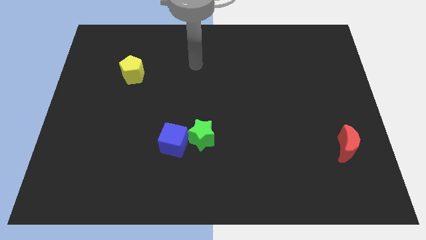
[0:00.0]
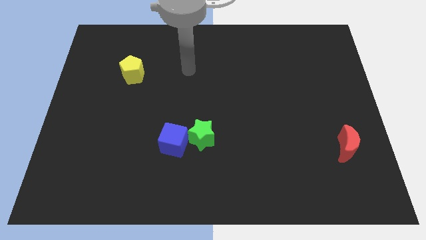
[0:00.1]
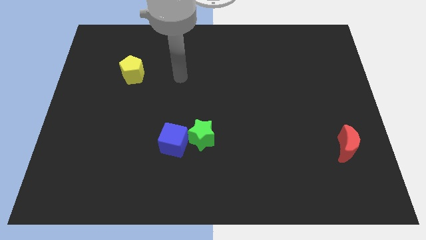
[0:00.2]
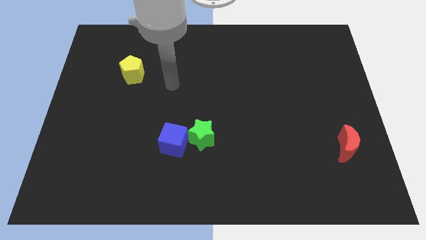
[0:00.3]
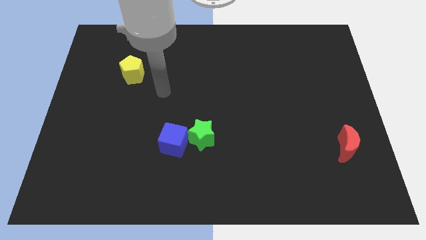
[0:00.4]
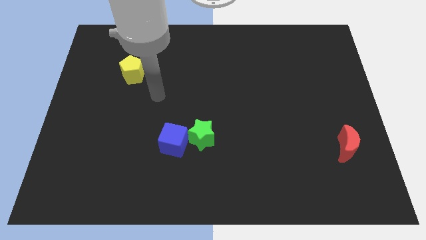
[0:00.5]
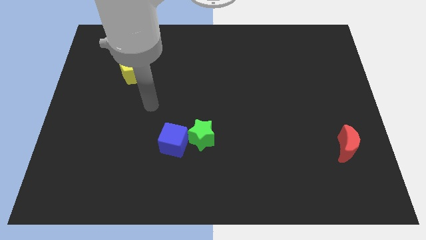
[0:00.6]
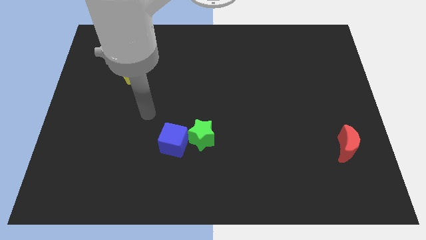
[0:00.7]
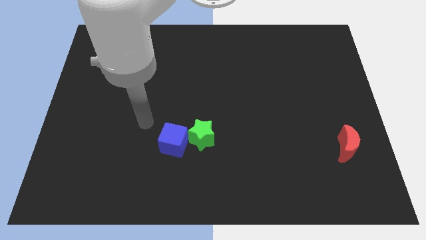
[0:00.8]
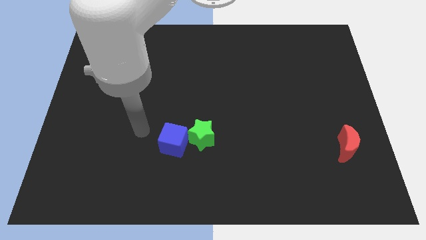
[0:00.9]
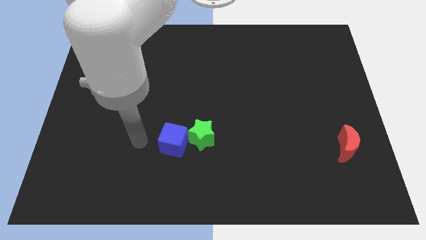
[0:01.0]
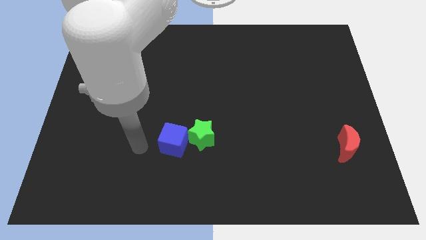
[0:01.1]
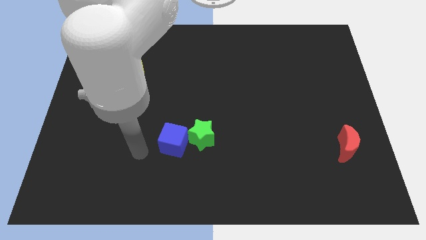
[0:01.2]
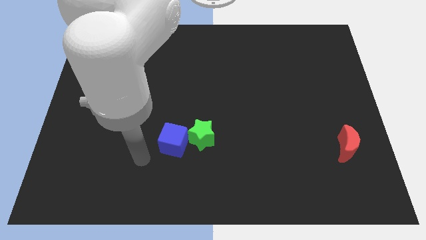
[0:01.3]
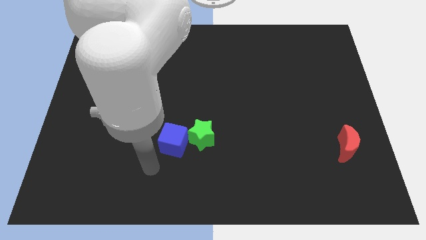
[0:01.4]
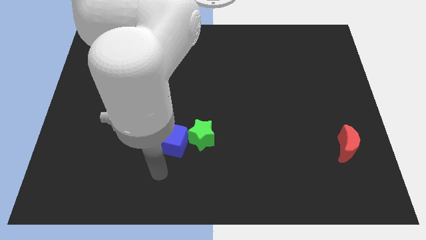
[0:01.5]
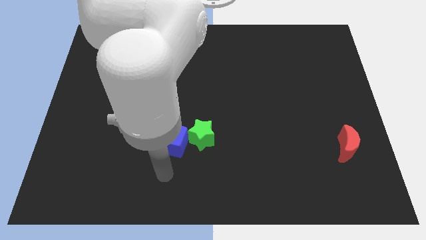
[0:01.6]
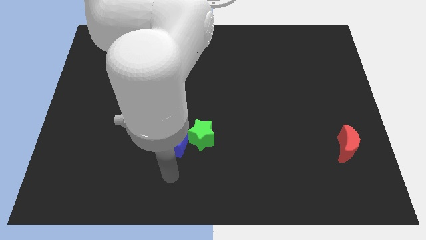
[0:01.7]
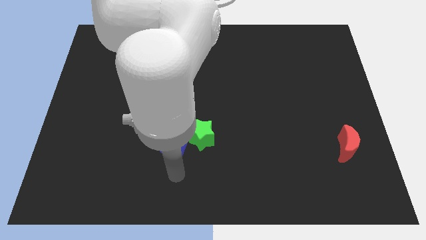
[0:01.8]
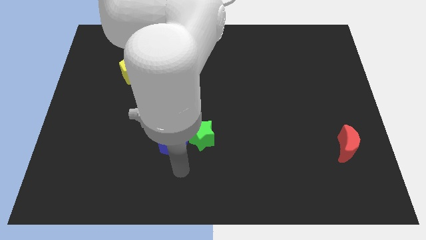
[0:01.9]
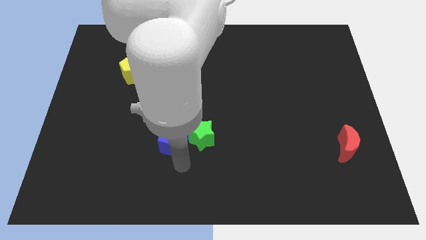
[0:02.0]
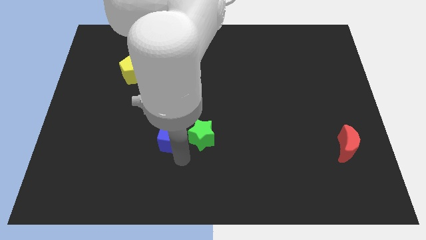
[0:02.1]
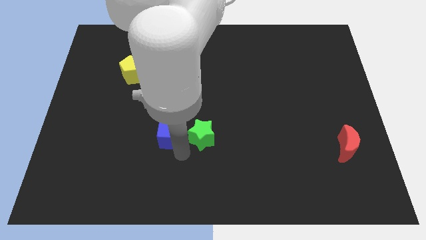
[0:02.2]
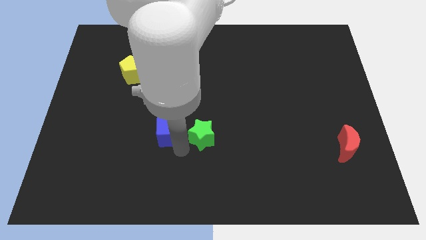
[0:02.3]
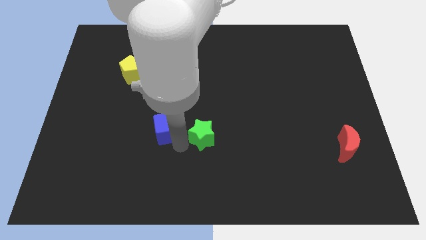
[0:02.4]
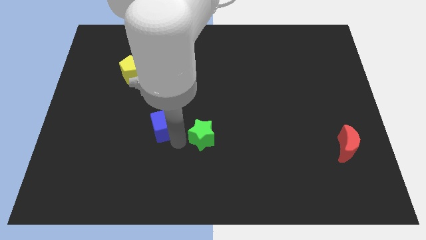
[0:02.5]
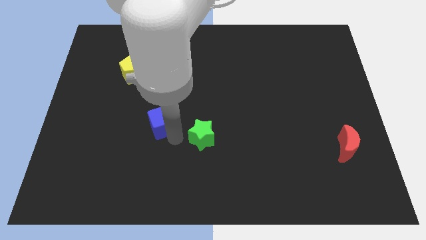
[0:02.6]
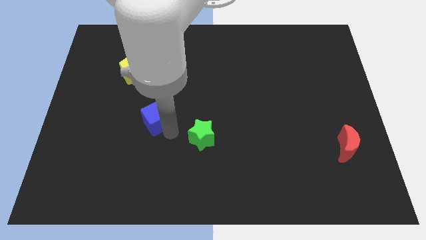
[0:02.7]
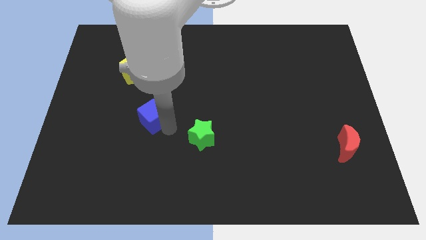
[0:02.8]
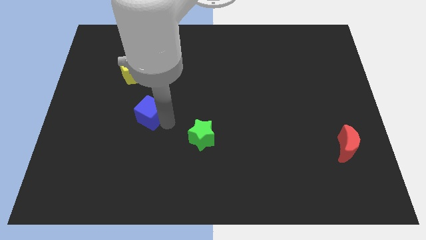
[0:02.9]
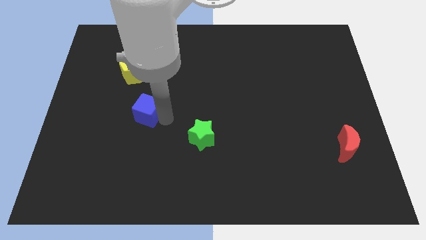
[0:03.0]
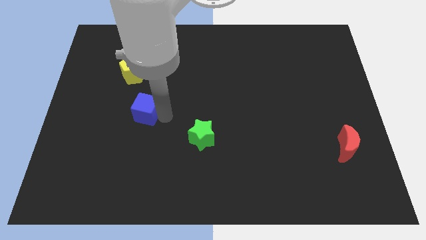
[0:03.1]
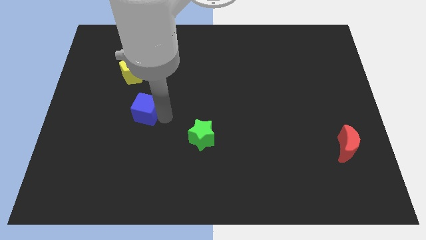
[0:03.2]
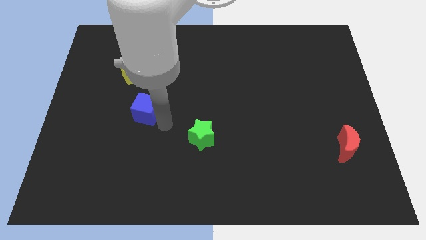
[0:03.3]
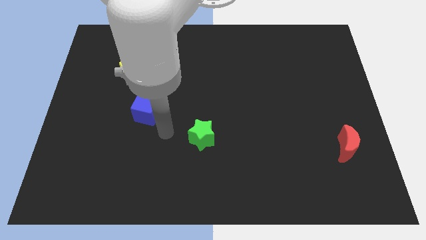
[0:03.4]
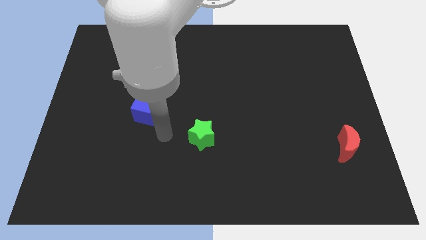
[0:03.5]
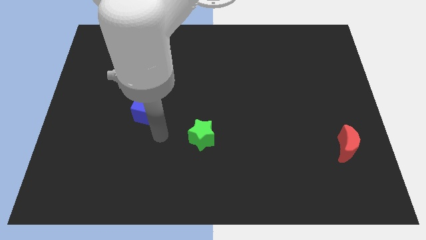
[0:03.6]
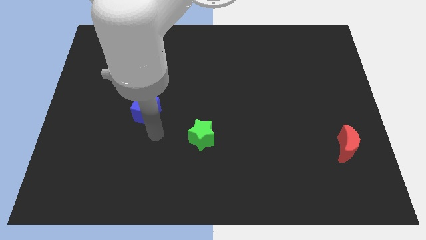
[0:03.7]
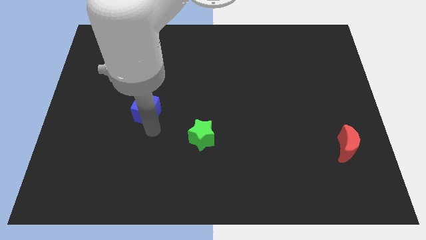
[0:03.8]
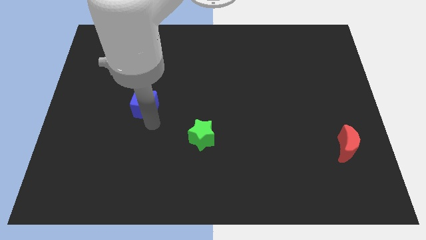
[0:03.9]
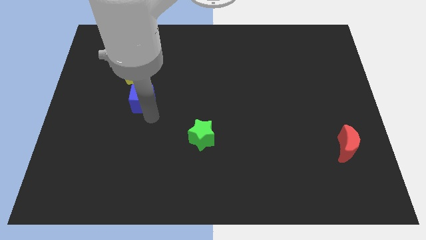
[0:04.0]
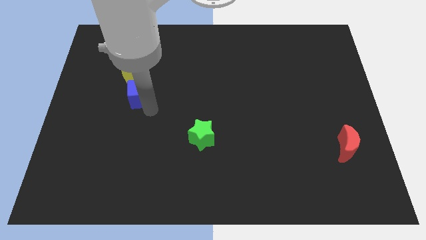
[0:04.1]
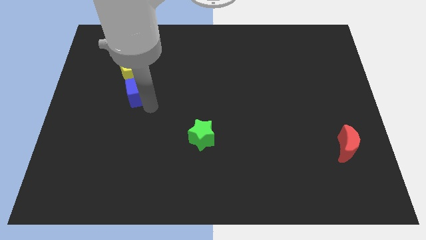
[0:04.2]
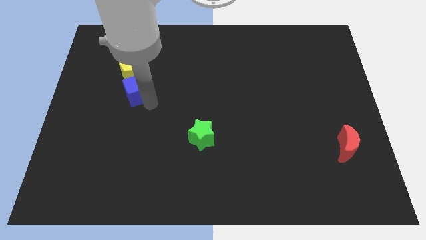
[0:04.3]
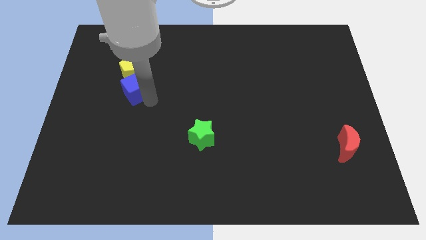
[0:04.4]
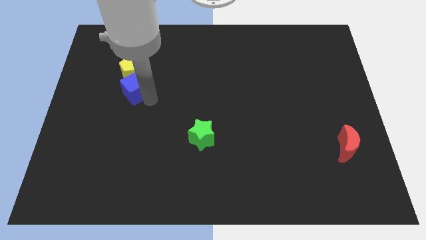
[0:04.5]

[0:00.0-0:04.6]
slide the blue block close to the yellow pentagon

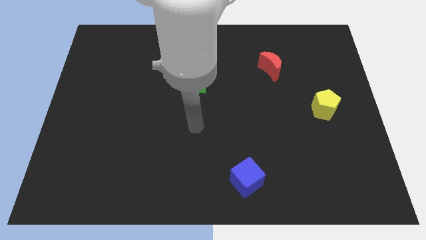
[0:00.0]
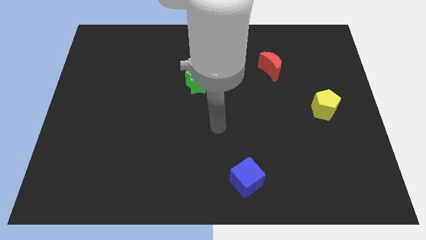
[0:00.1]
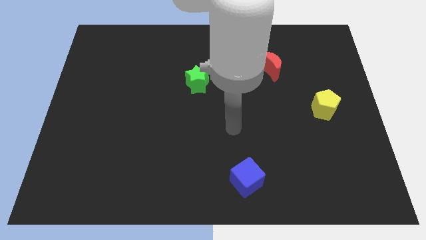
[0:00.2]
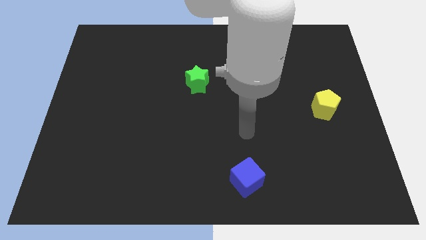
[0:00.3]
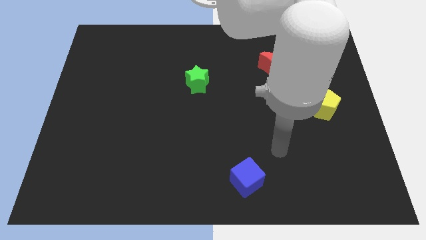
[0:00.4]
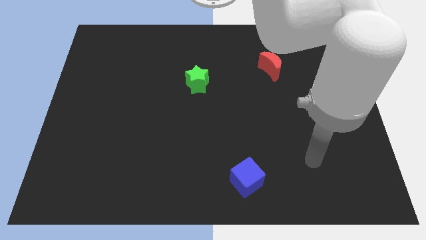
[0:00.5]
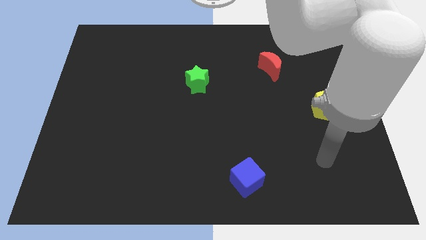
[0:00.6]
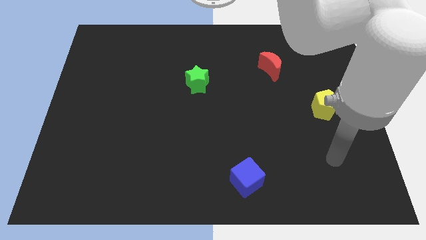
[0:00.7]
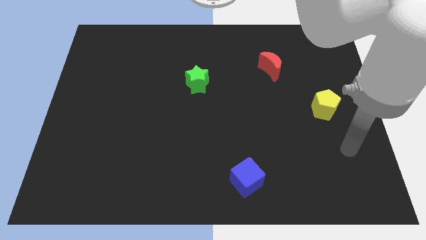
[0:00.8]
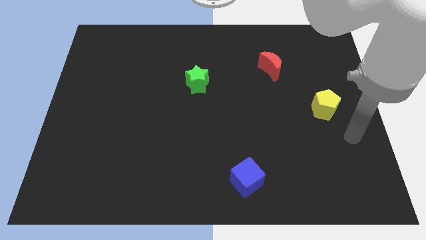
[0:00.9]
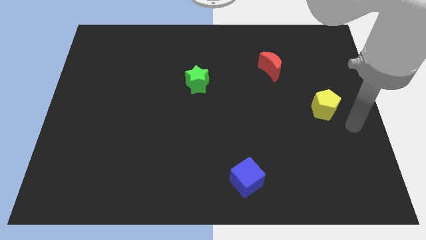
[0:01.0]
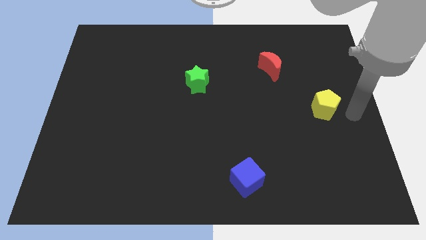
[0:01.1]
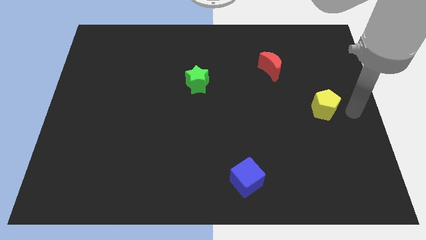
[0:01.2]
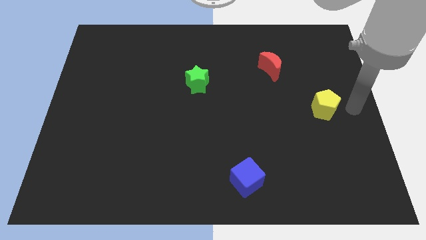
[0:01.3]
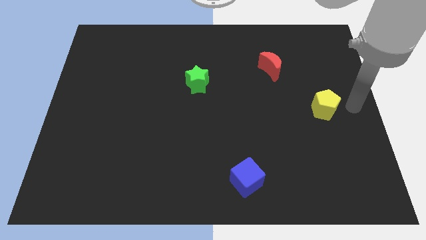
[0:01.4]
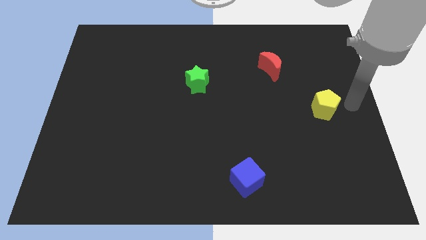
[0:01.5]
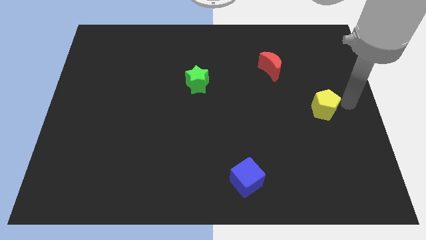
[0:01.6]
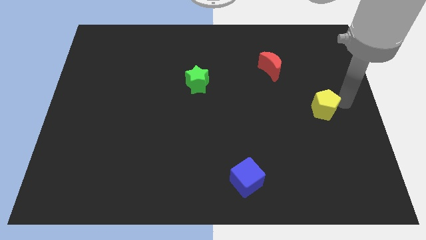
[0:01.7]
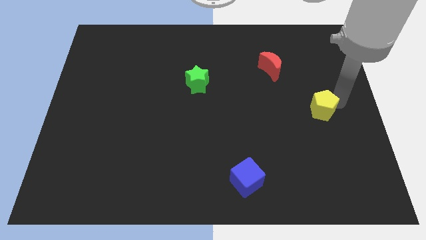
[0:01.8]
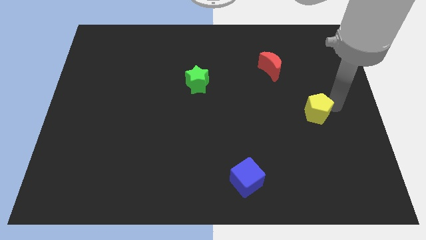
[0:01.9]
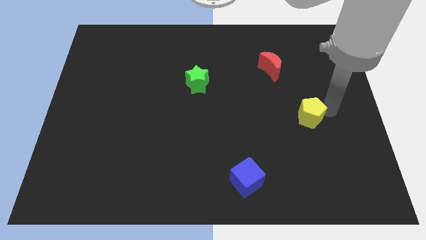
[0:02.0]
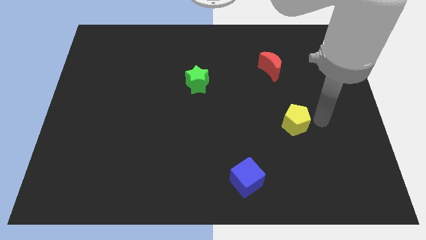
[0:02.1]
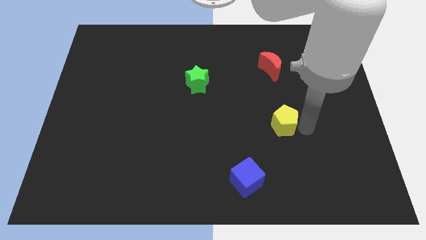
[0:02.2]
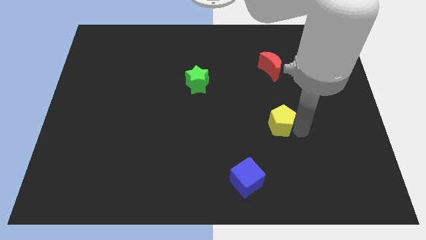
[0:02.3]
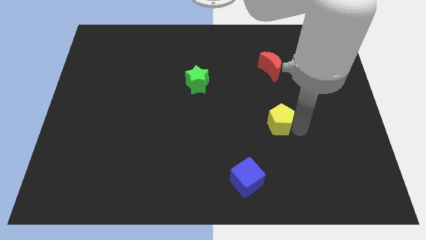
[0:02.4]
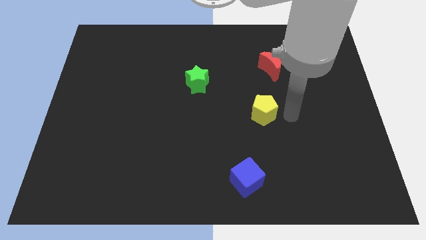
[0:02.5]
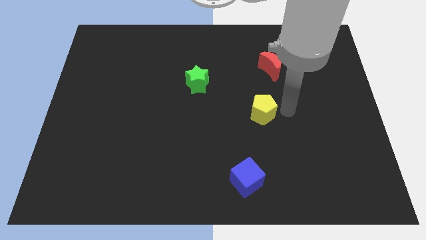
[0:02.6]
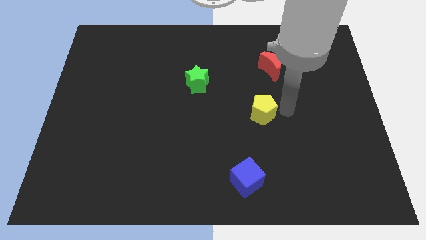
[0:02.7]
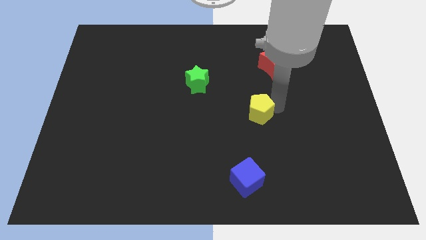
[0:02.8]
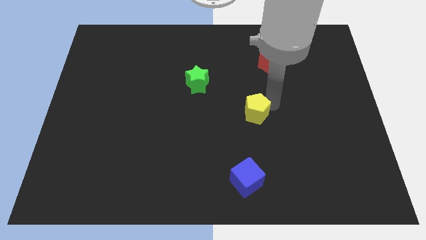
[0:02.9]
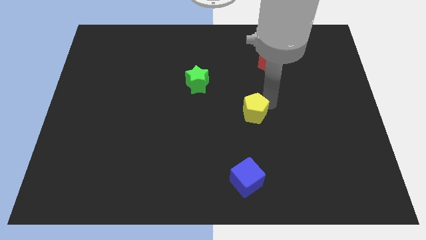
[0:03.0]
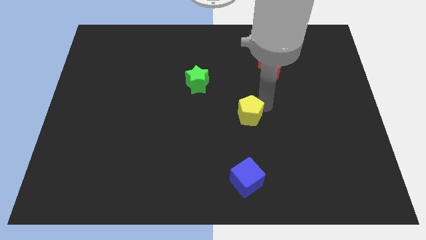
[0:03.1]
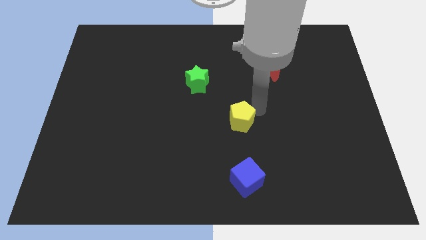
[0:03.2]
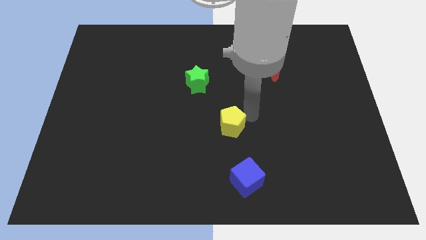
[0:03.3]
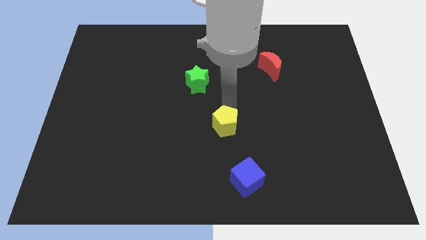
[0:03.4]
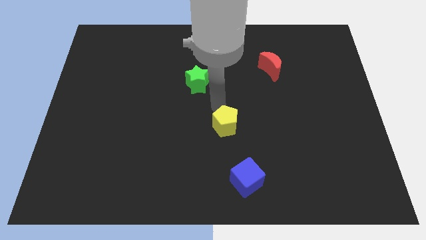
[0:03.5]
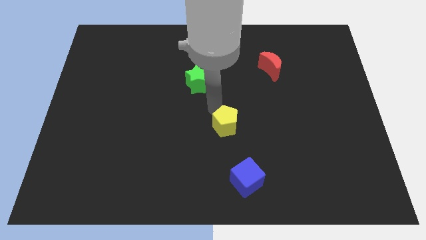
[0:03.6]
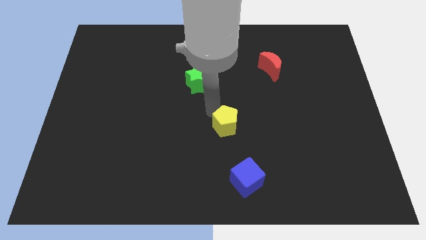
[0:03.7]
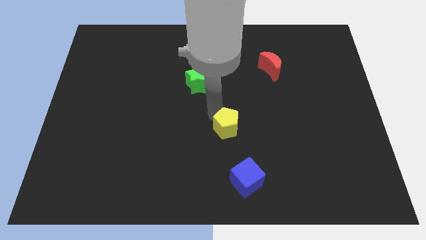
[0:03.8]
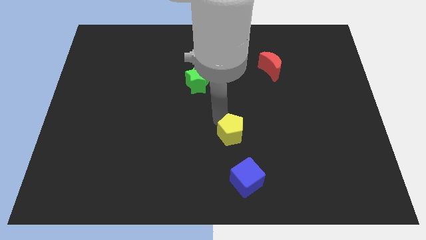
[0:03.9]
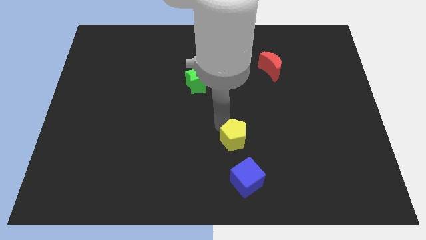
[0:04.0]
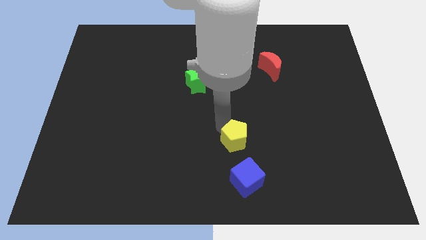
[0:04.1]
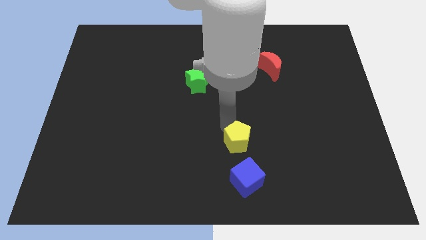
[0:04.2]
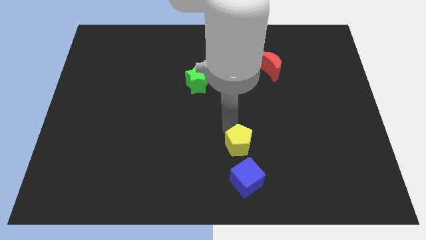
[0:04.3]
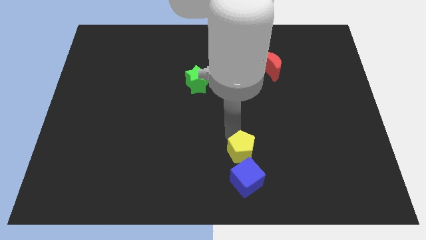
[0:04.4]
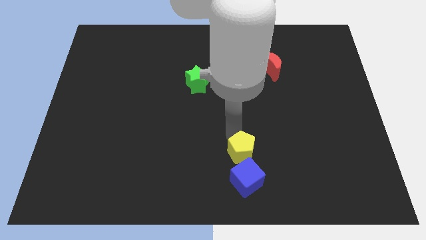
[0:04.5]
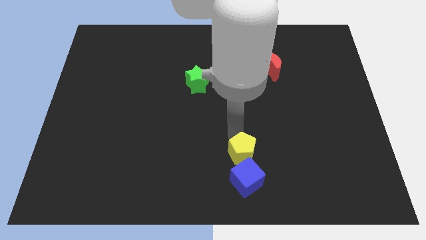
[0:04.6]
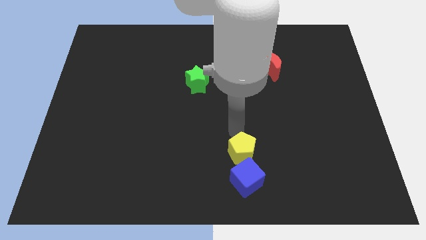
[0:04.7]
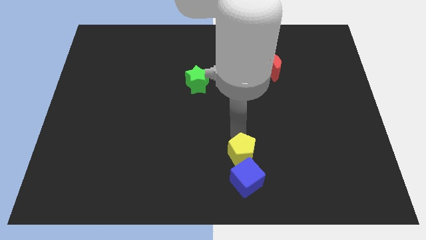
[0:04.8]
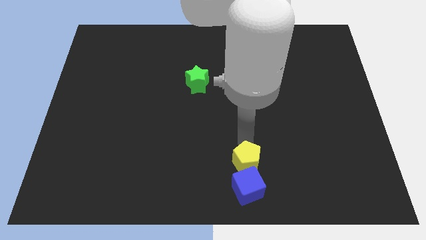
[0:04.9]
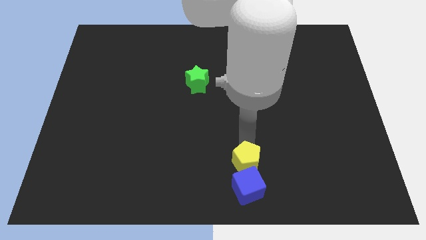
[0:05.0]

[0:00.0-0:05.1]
move the pentagon next to the blue block
